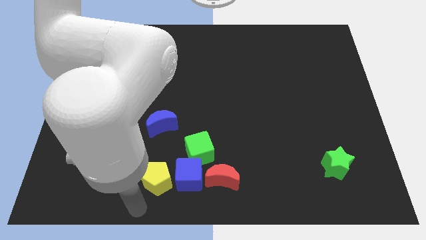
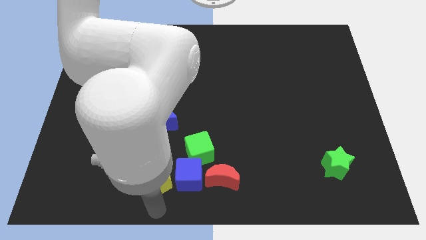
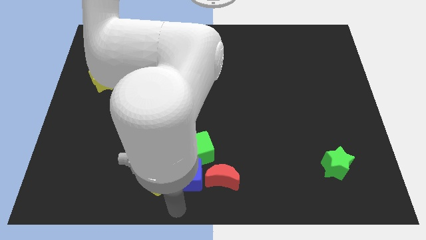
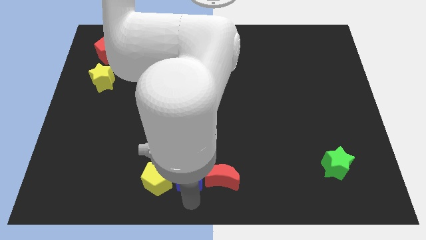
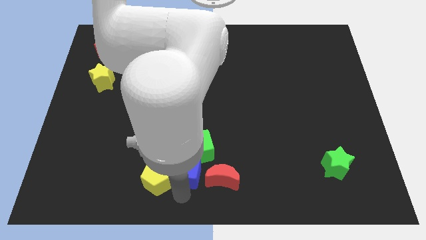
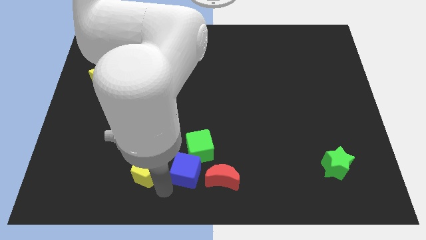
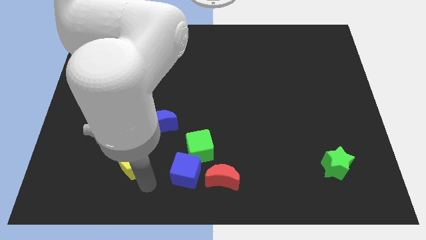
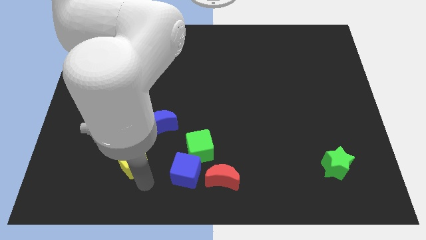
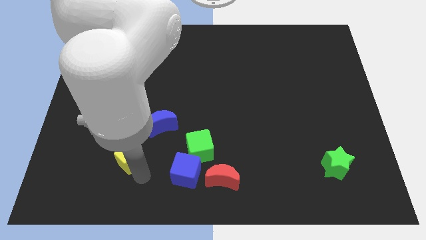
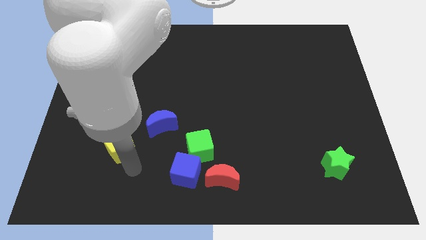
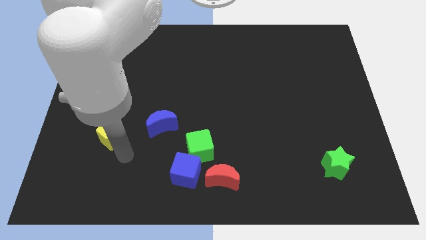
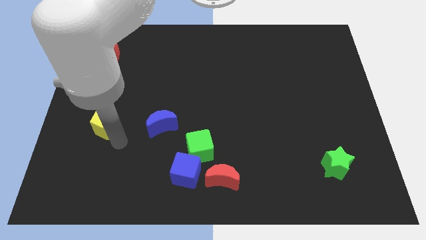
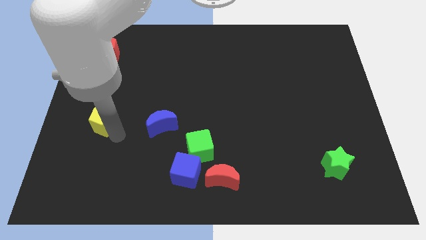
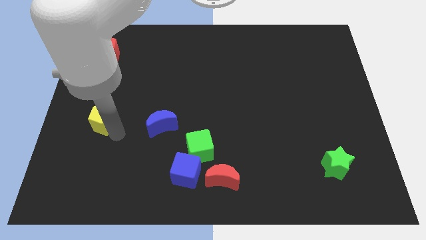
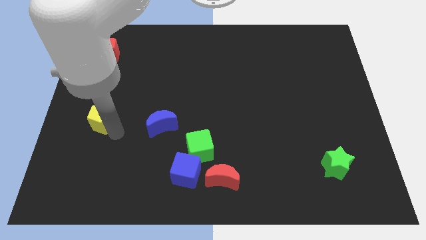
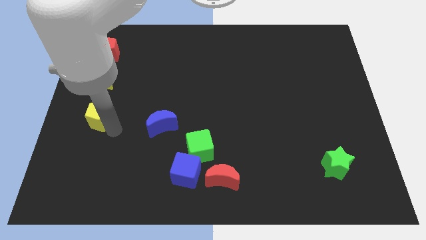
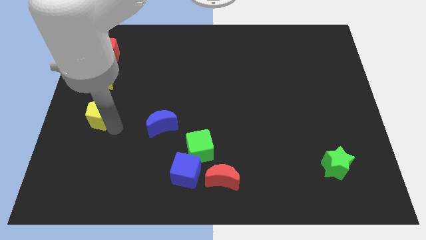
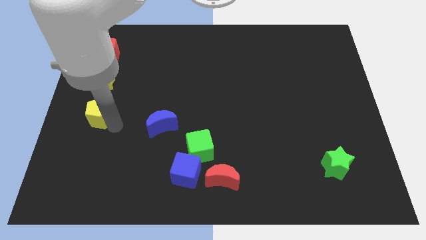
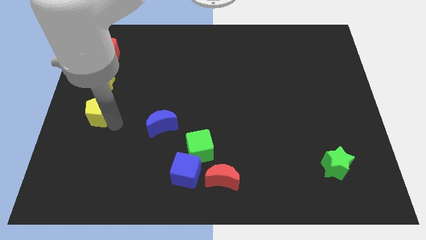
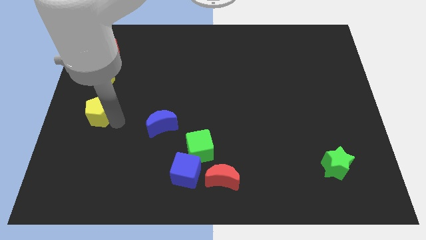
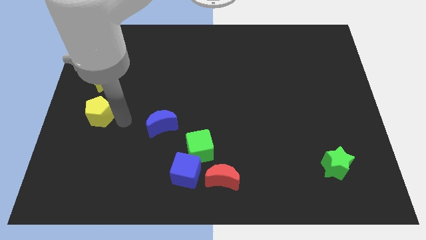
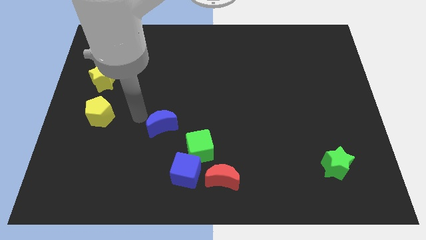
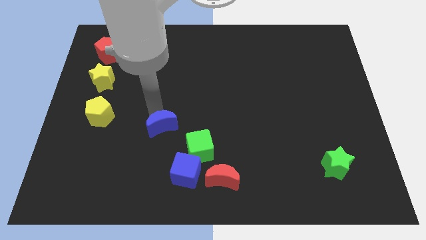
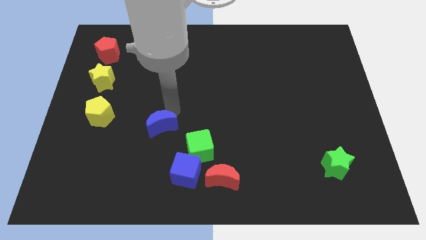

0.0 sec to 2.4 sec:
place the yellow pentagon below the yellow star

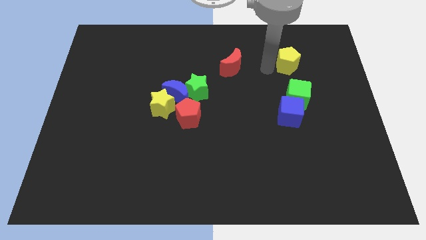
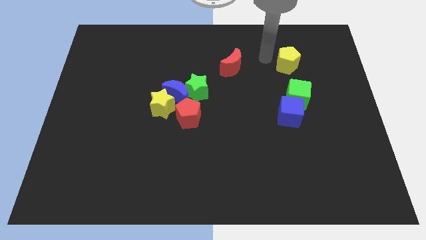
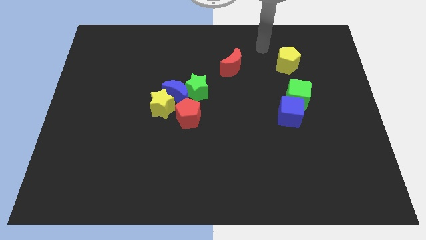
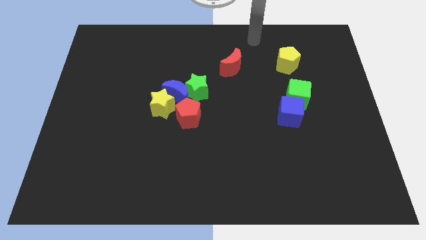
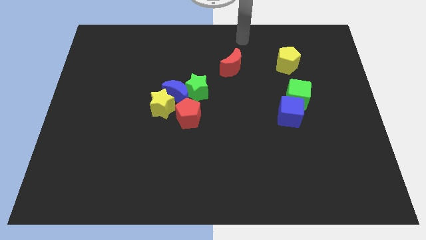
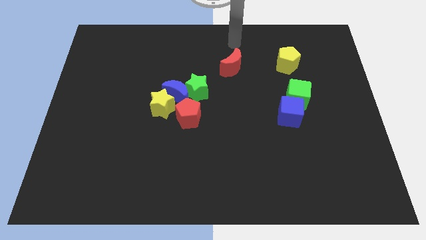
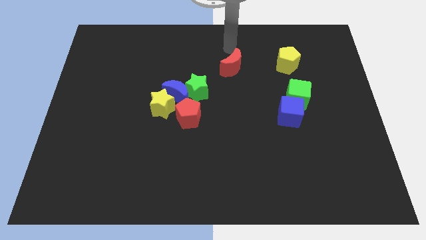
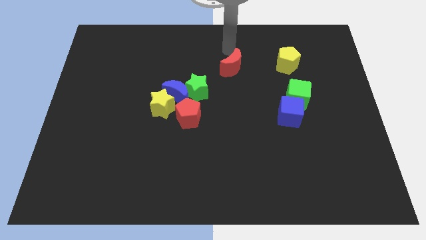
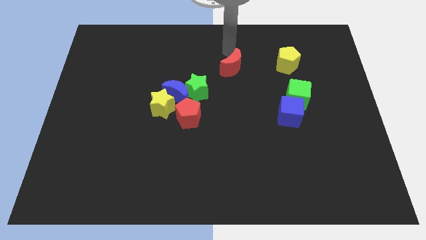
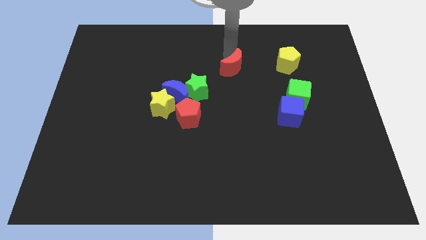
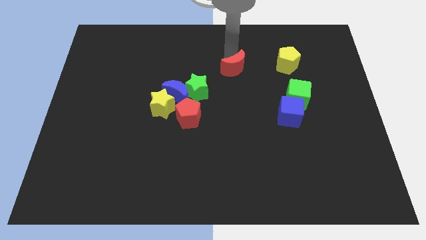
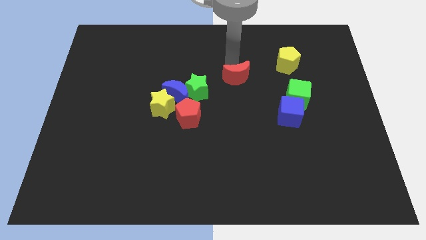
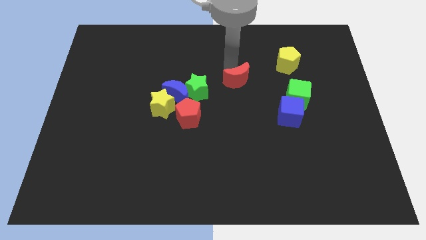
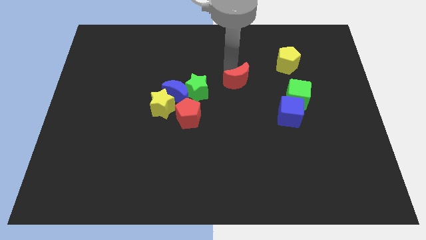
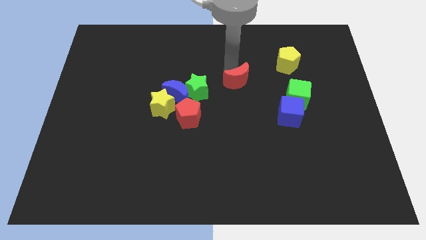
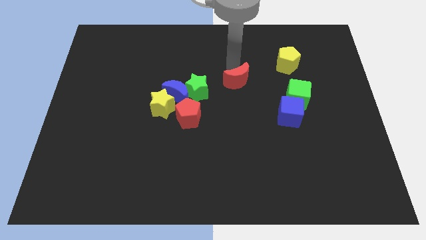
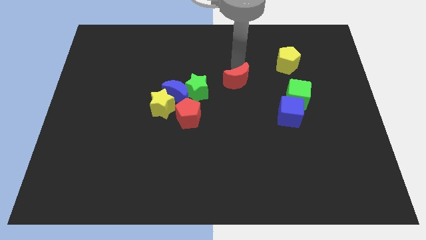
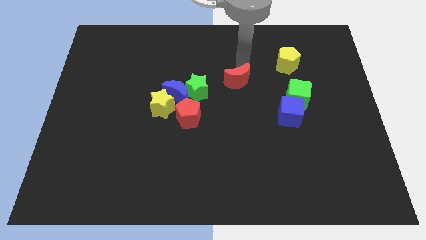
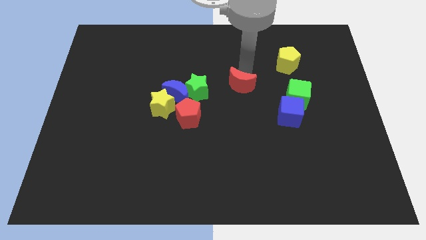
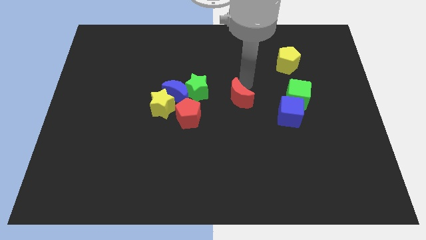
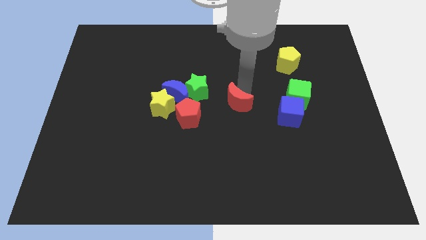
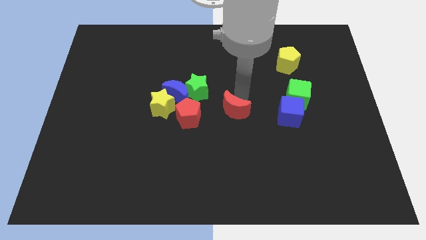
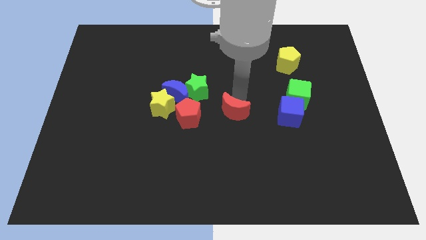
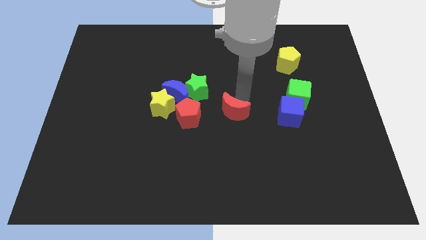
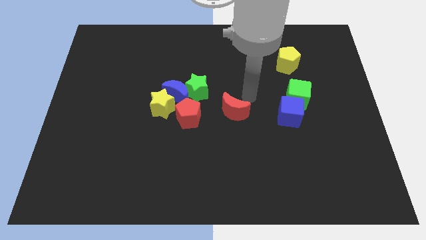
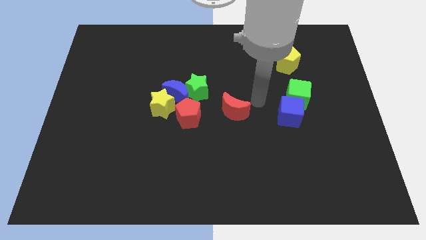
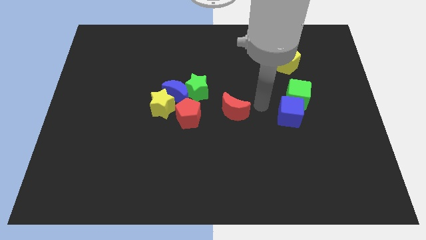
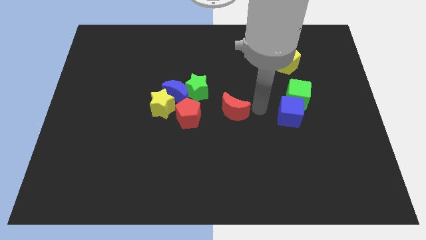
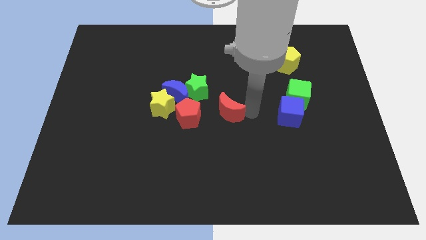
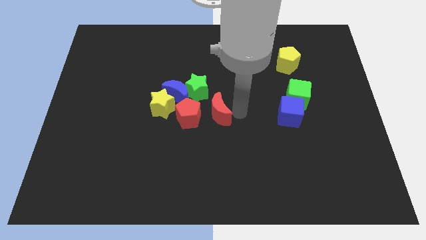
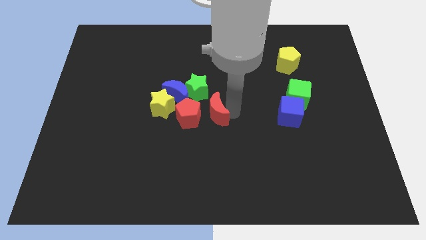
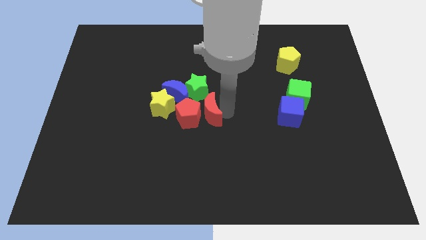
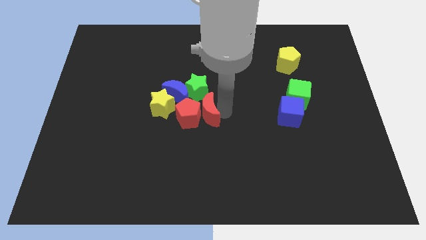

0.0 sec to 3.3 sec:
place the red crescent below the green star

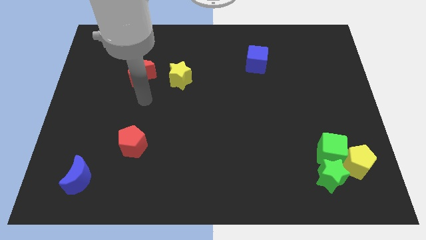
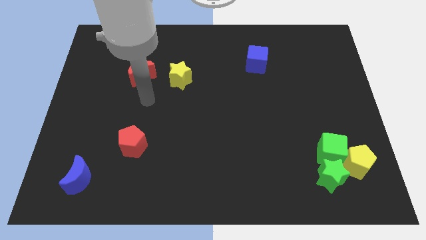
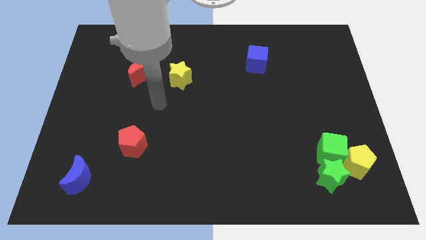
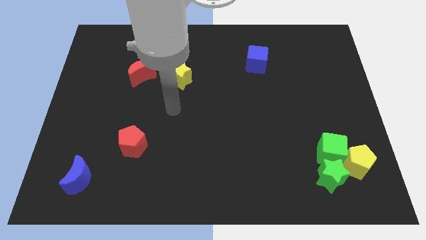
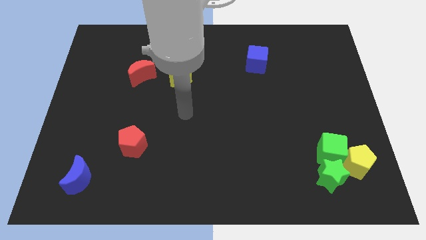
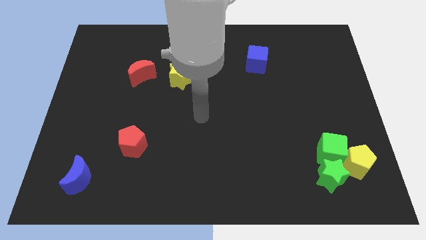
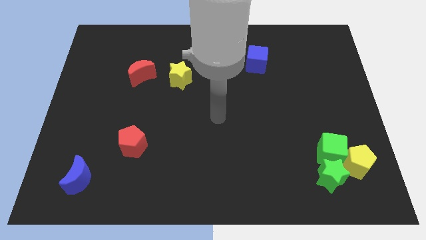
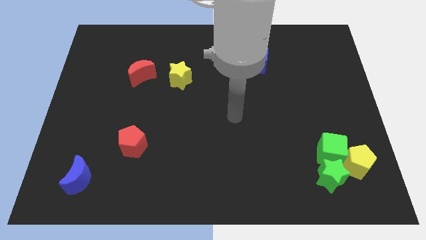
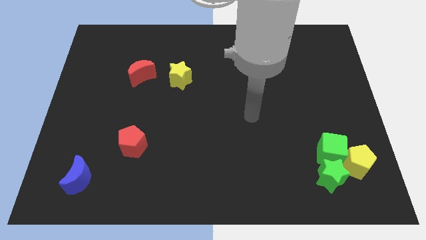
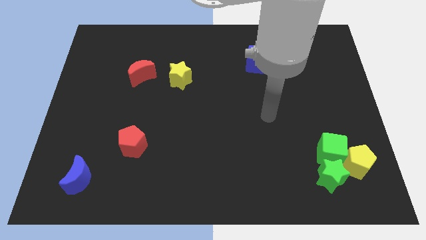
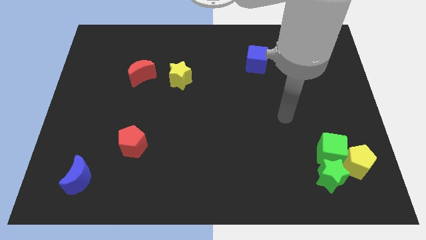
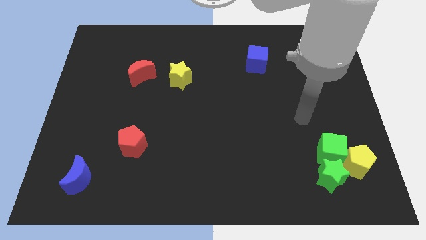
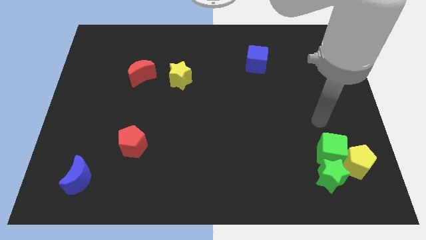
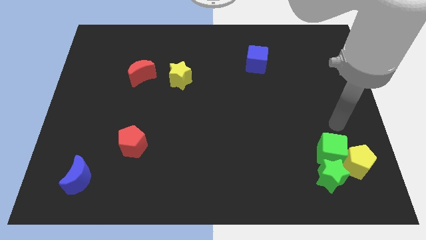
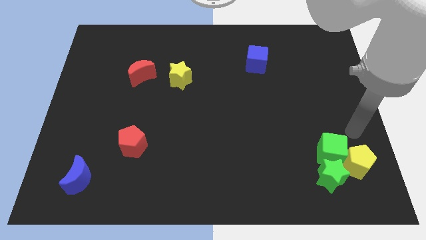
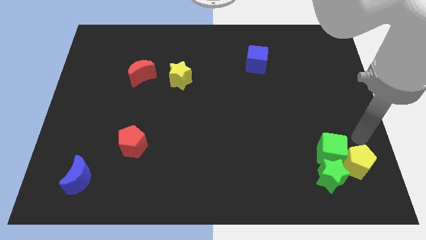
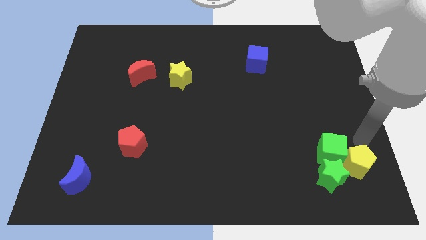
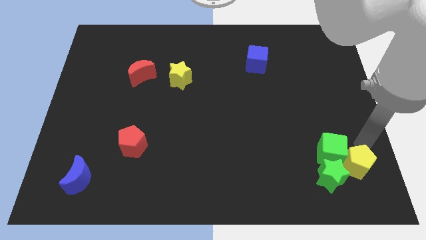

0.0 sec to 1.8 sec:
move your arm closer to the yellow pentagon

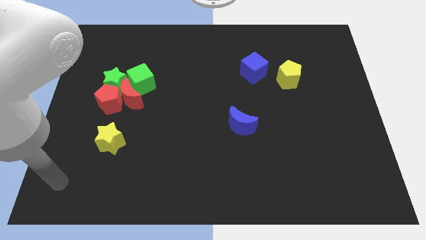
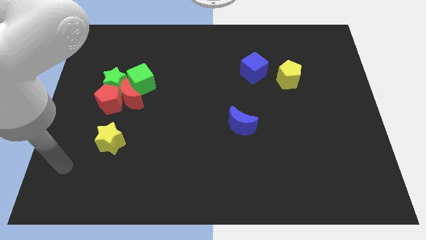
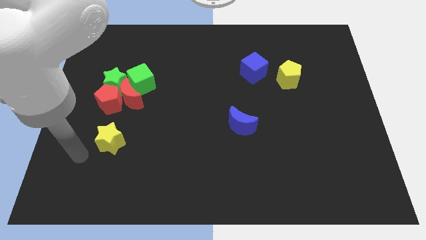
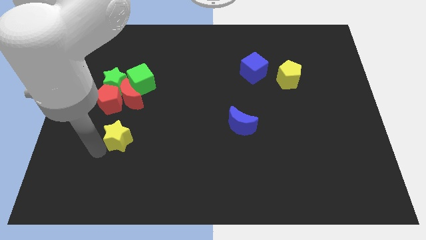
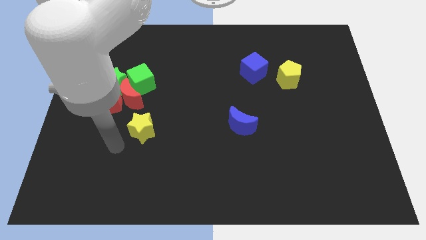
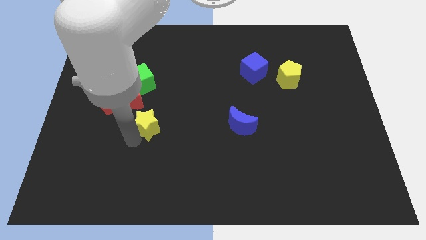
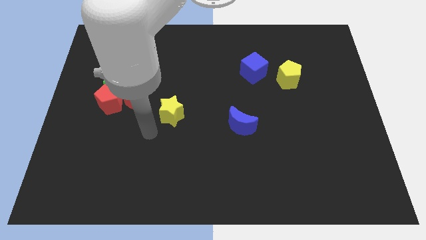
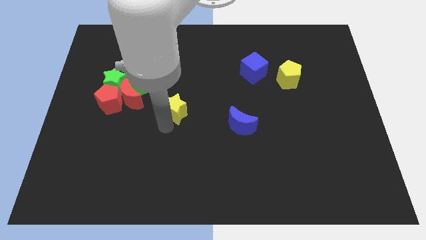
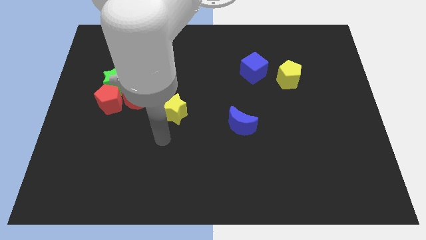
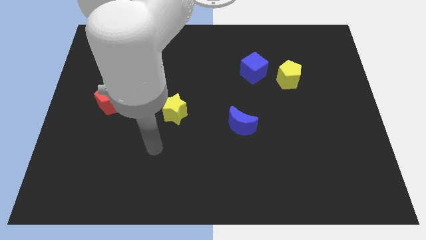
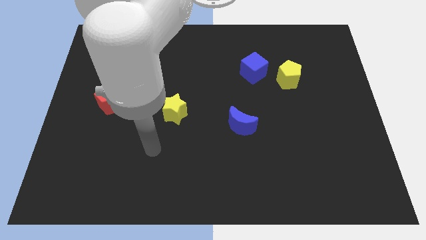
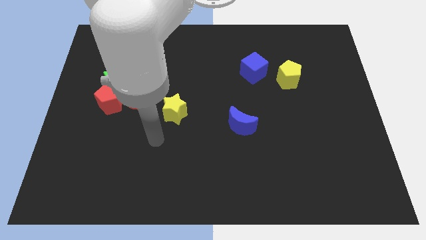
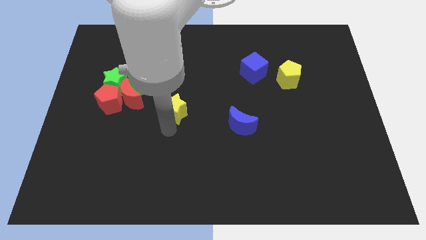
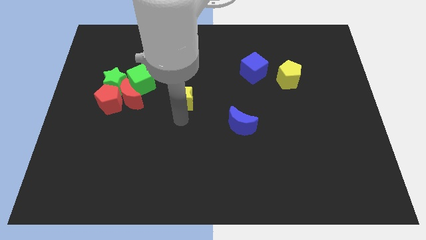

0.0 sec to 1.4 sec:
place the yellow star diagonally top left to the blue crescent

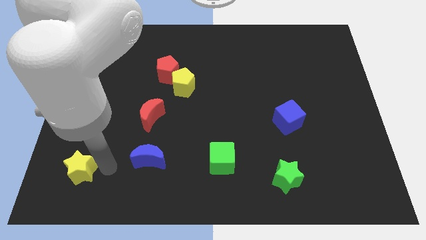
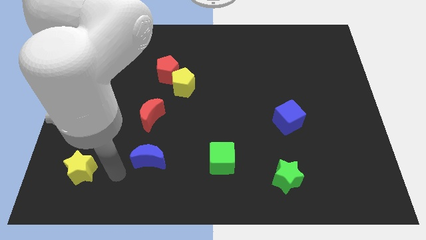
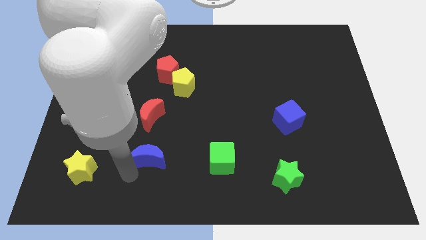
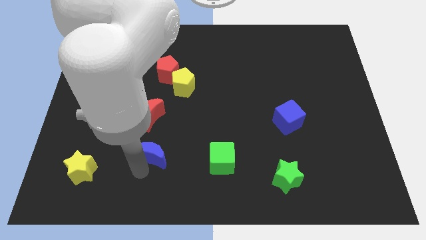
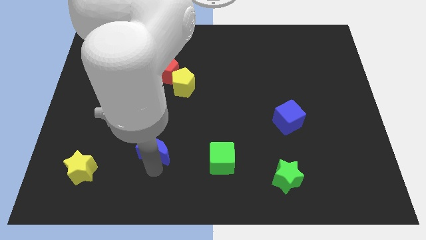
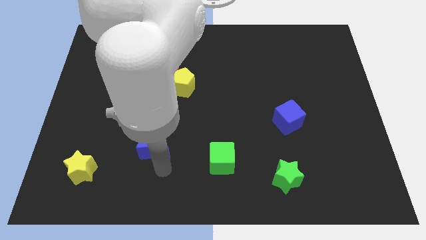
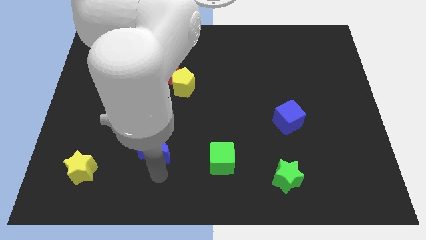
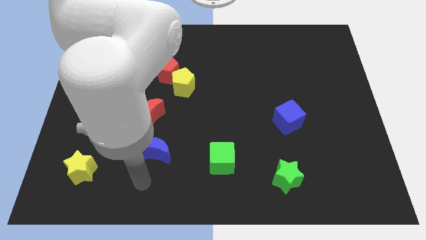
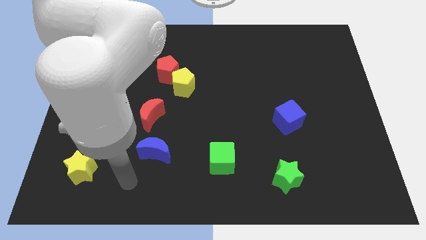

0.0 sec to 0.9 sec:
push the blue moon towards the red moon
